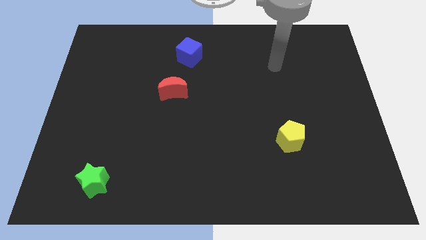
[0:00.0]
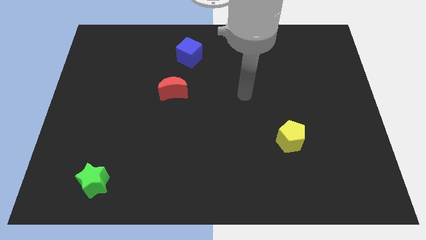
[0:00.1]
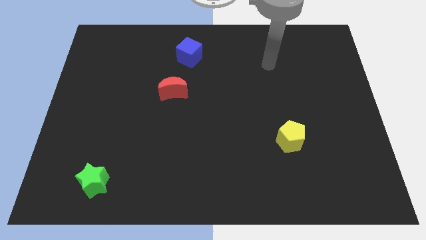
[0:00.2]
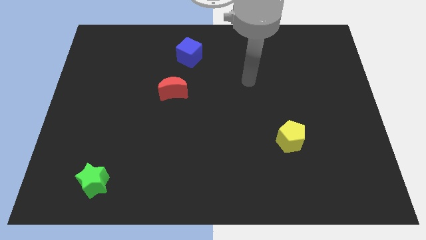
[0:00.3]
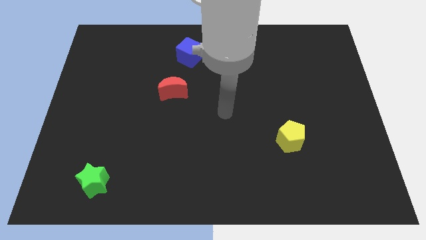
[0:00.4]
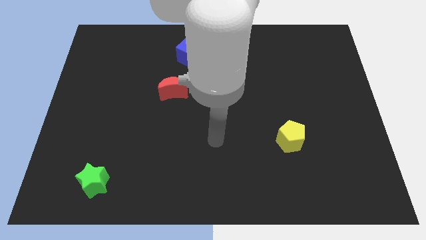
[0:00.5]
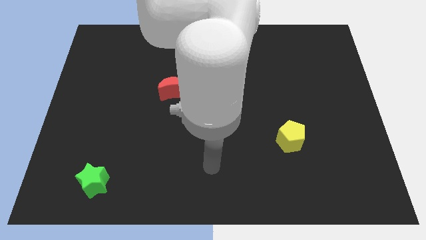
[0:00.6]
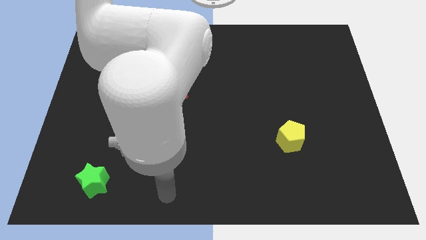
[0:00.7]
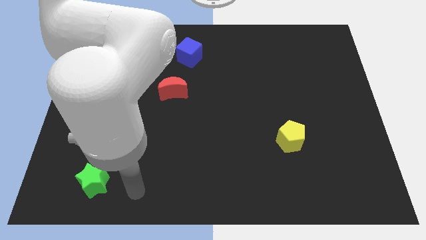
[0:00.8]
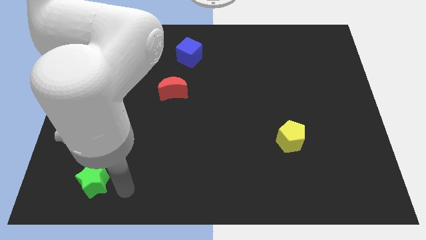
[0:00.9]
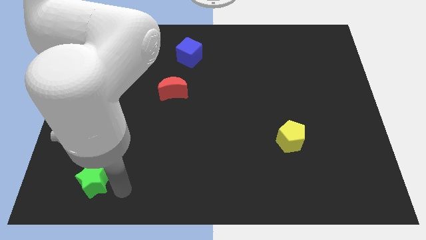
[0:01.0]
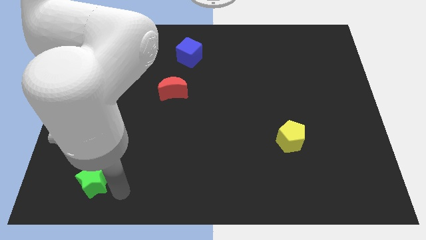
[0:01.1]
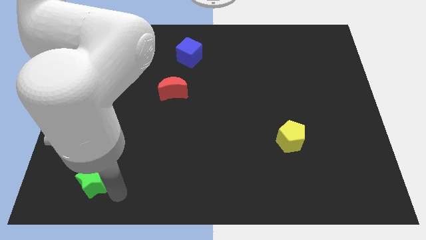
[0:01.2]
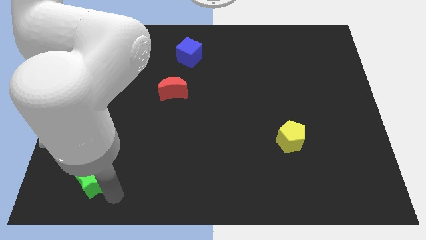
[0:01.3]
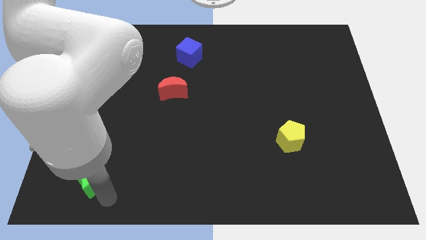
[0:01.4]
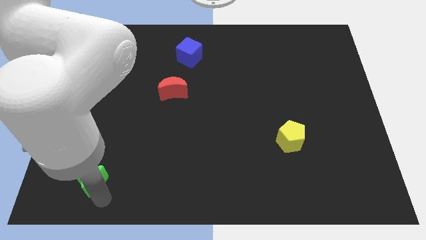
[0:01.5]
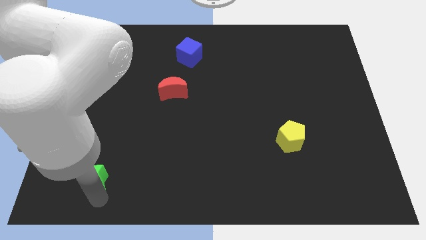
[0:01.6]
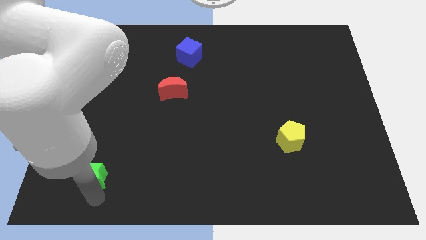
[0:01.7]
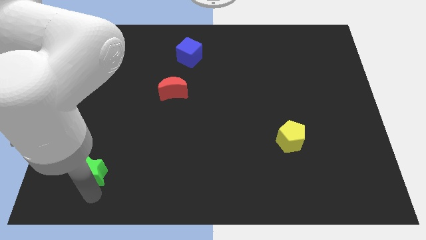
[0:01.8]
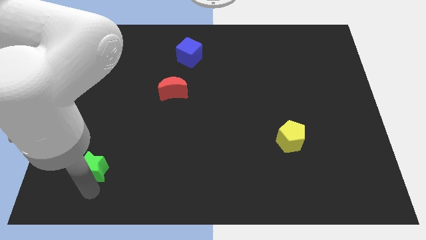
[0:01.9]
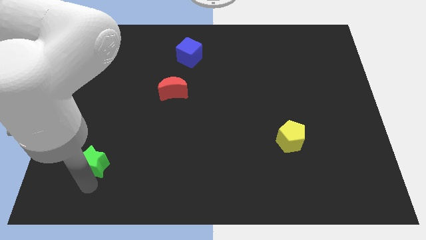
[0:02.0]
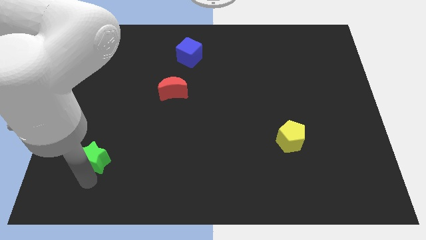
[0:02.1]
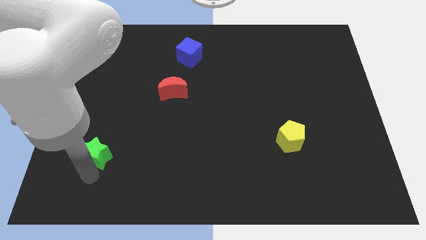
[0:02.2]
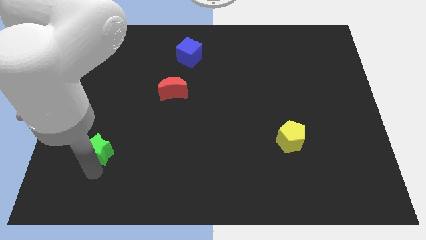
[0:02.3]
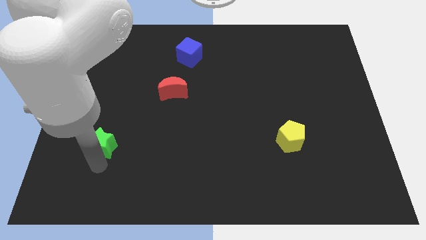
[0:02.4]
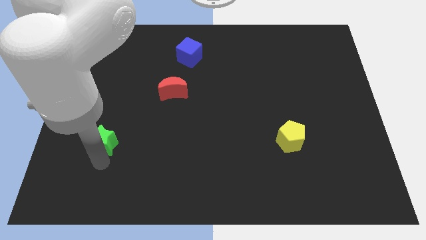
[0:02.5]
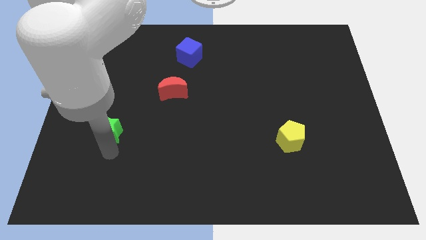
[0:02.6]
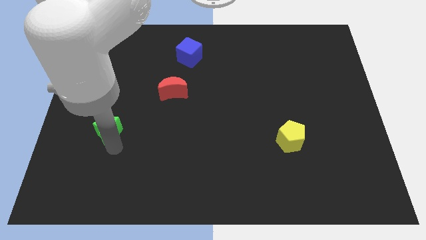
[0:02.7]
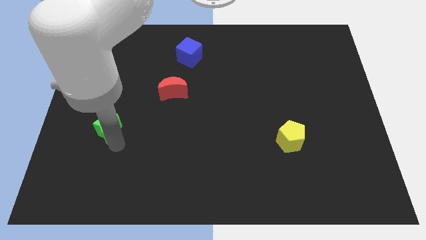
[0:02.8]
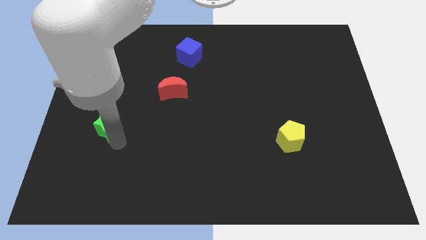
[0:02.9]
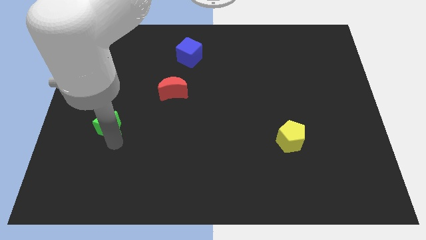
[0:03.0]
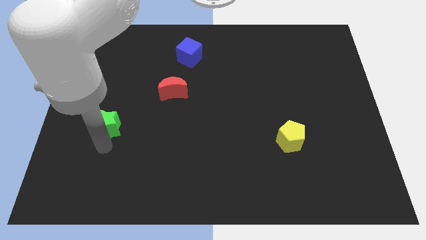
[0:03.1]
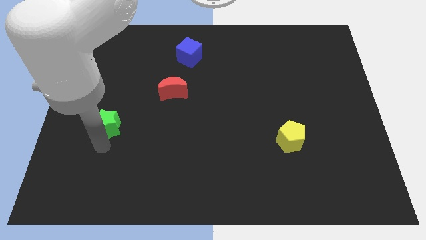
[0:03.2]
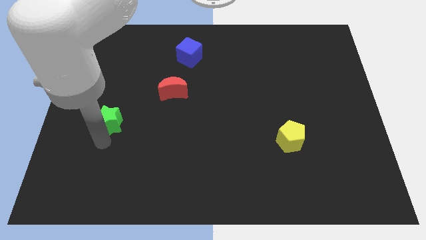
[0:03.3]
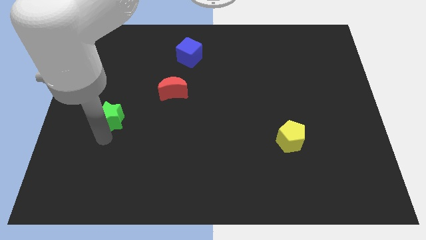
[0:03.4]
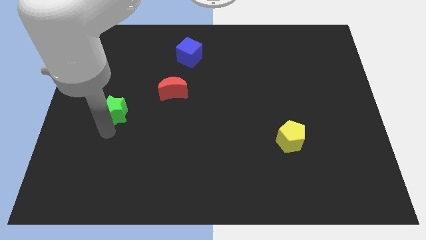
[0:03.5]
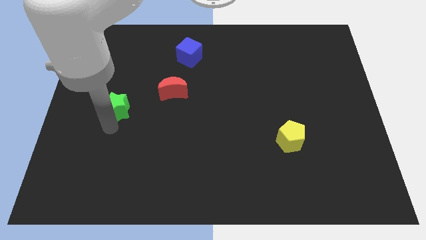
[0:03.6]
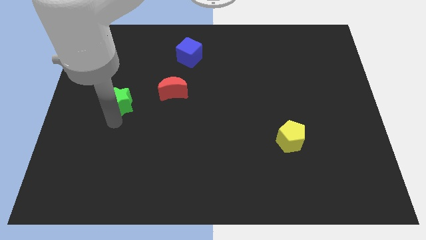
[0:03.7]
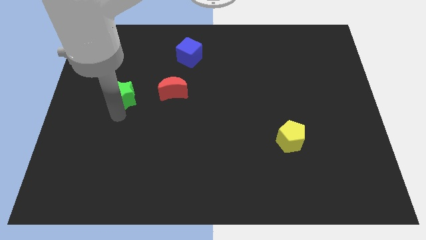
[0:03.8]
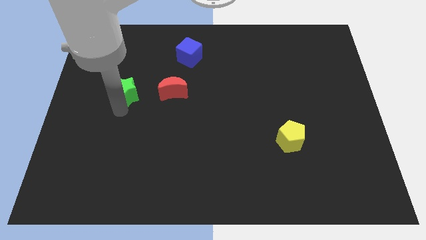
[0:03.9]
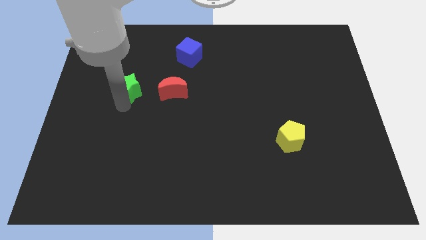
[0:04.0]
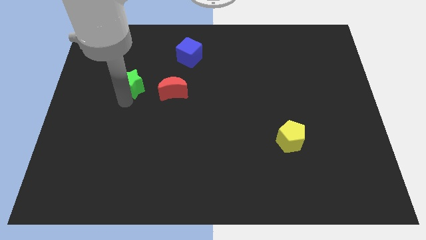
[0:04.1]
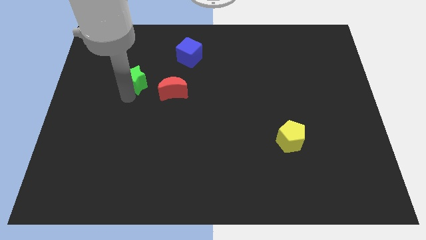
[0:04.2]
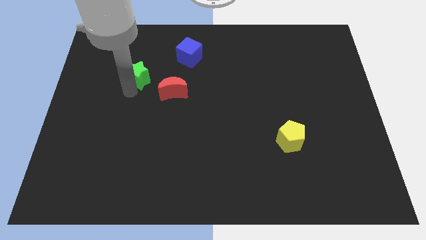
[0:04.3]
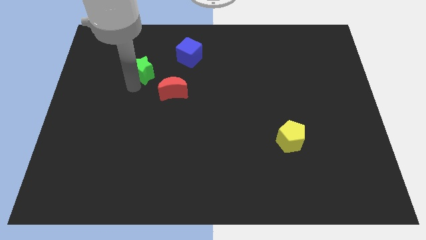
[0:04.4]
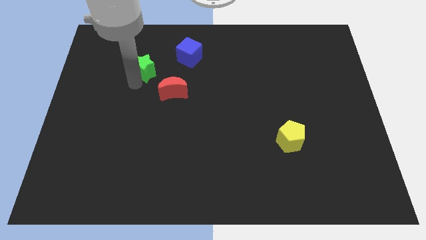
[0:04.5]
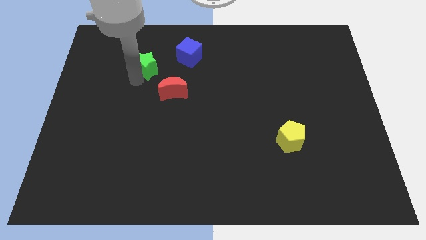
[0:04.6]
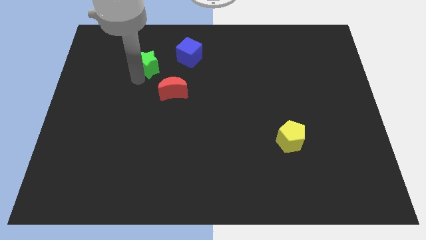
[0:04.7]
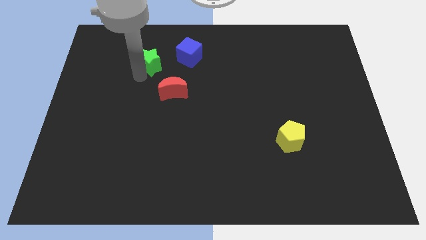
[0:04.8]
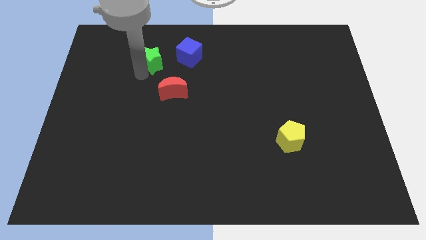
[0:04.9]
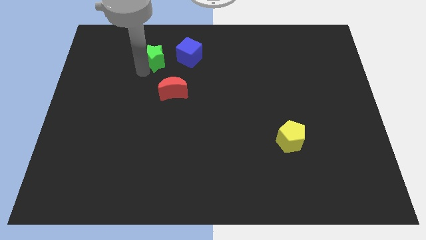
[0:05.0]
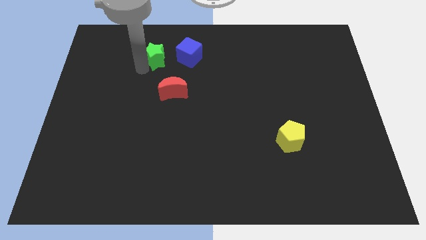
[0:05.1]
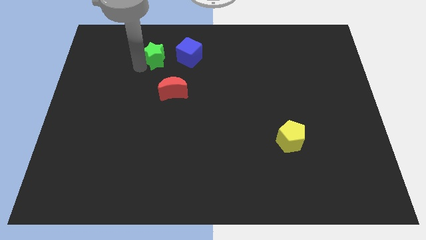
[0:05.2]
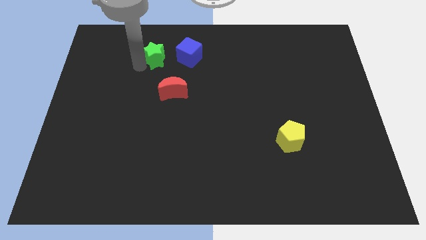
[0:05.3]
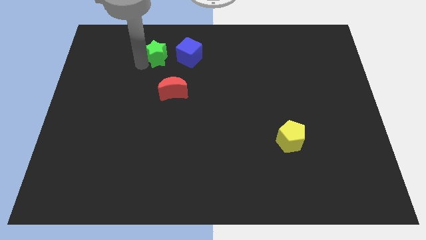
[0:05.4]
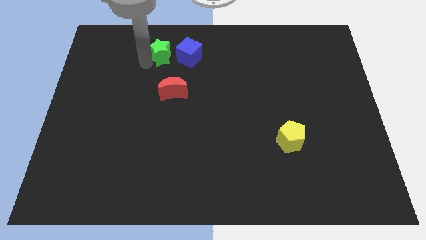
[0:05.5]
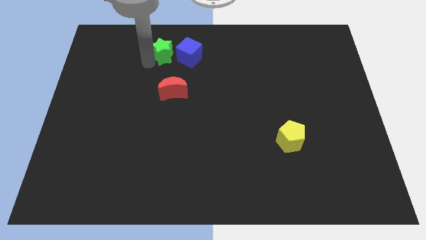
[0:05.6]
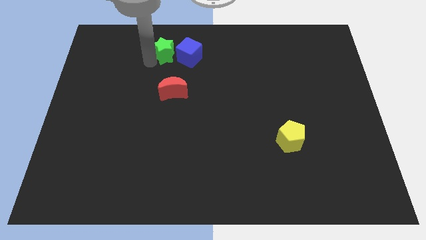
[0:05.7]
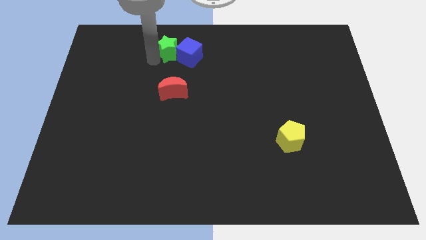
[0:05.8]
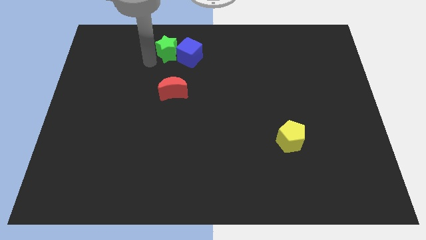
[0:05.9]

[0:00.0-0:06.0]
put the star to the cube

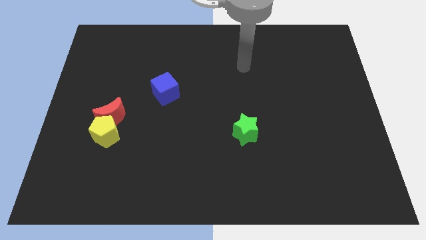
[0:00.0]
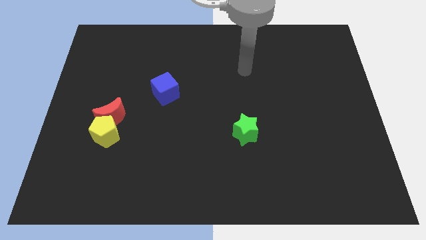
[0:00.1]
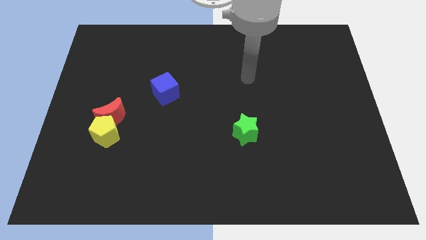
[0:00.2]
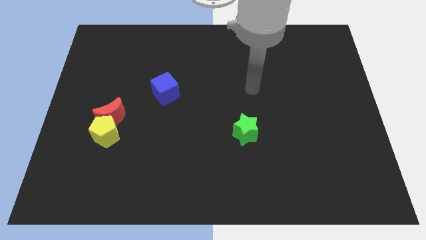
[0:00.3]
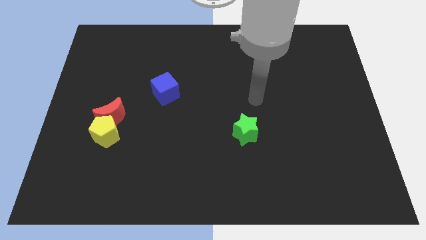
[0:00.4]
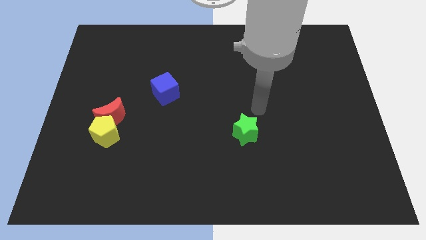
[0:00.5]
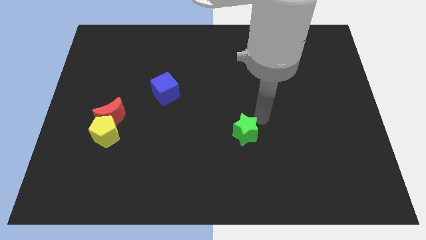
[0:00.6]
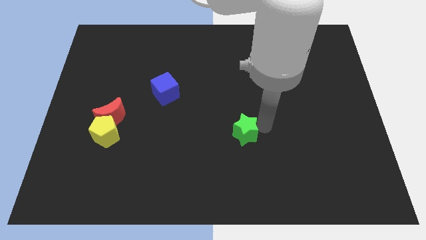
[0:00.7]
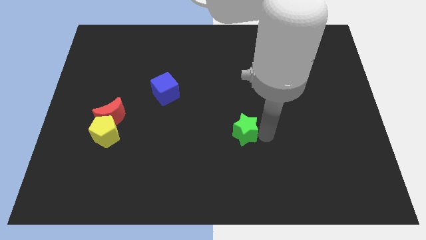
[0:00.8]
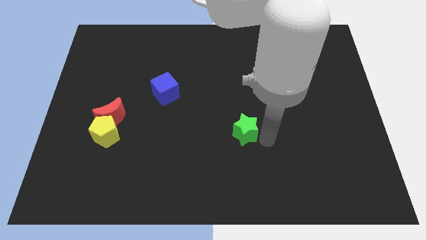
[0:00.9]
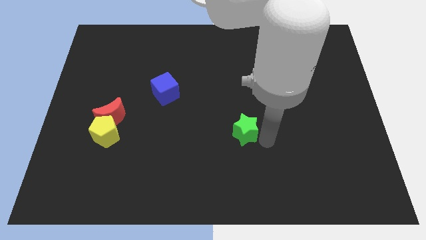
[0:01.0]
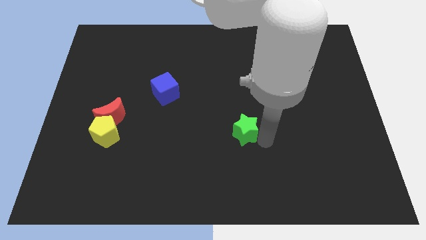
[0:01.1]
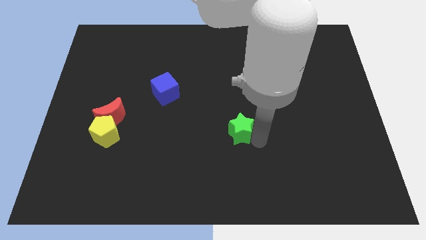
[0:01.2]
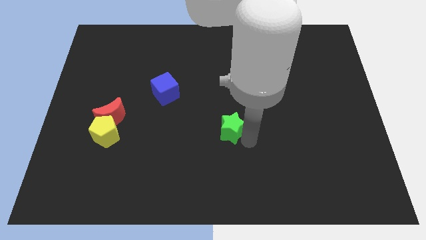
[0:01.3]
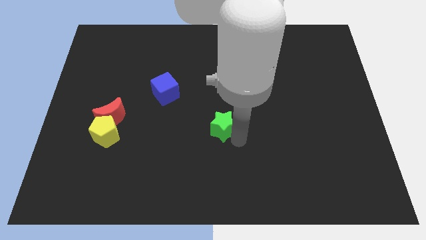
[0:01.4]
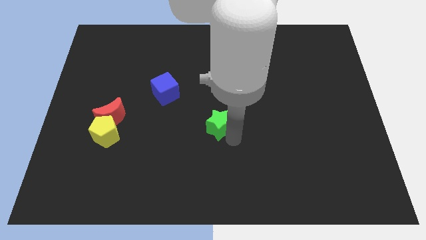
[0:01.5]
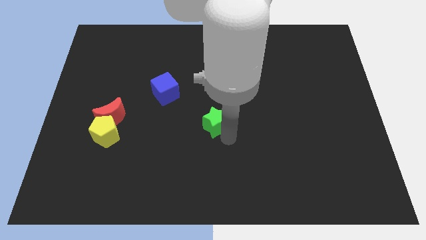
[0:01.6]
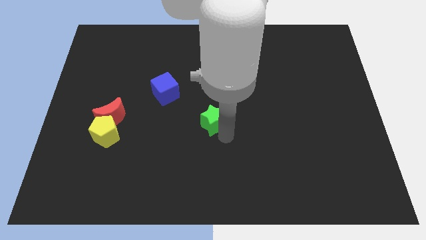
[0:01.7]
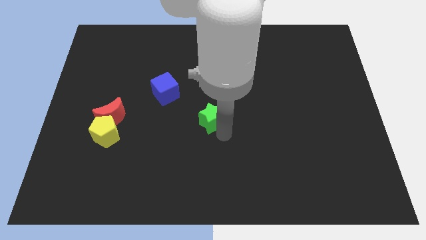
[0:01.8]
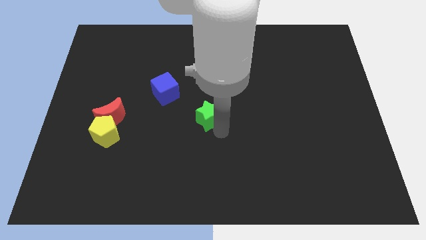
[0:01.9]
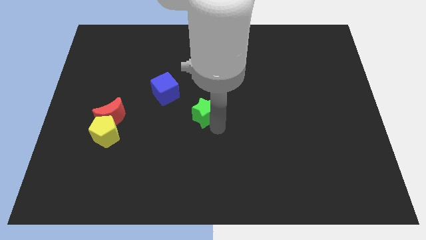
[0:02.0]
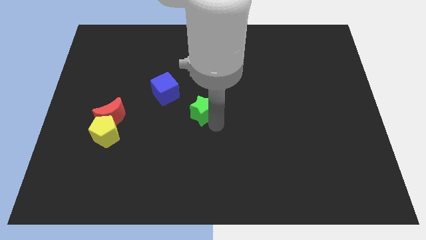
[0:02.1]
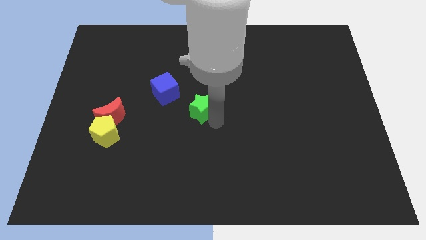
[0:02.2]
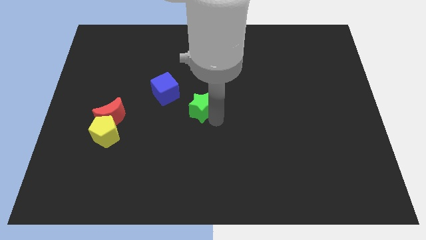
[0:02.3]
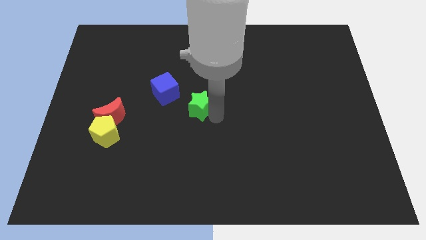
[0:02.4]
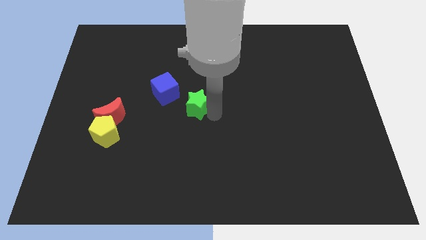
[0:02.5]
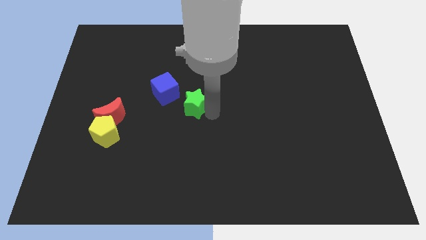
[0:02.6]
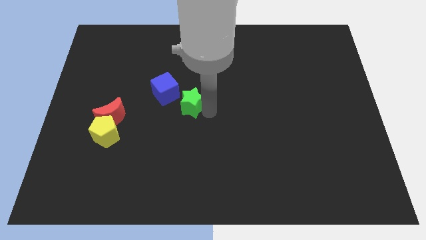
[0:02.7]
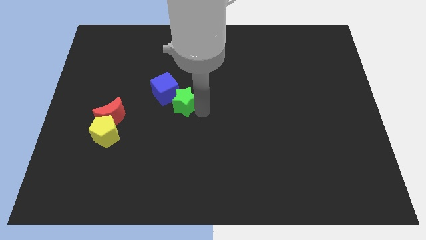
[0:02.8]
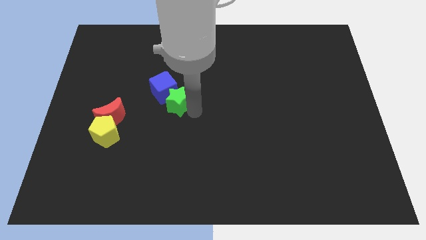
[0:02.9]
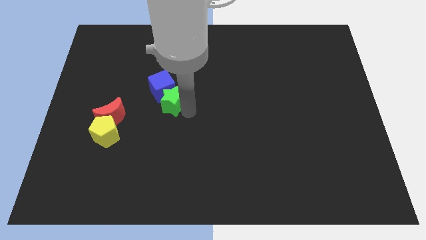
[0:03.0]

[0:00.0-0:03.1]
put the green star next to the cube
